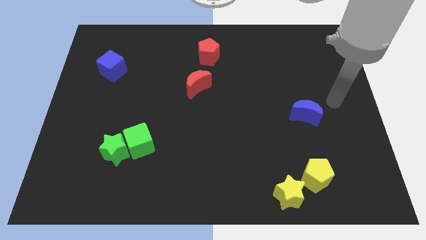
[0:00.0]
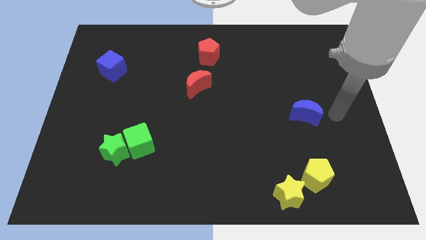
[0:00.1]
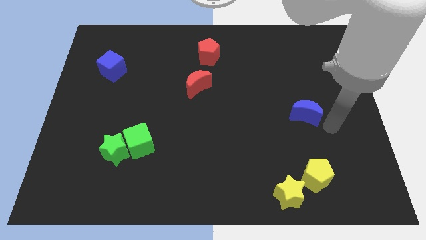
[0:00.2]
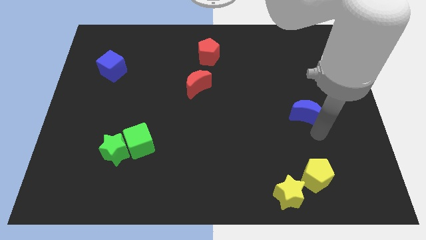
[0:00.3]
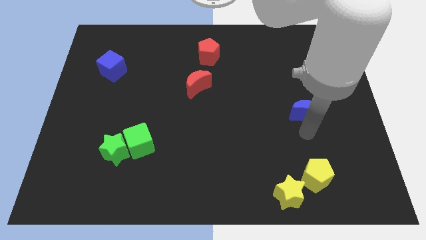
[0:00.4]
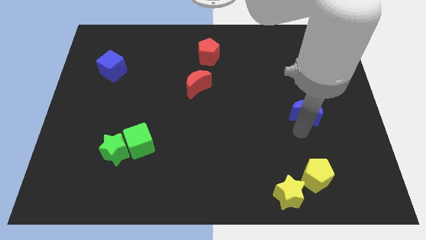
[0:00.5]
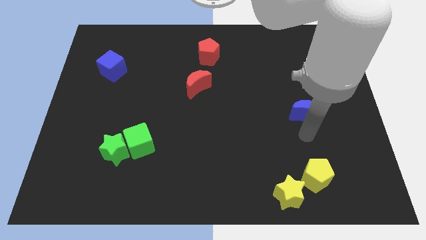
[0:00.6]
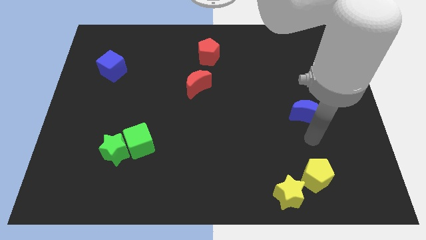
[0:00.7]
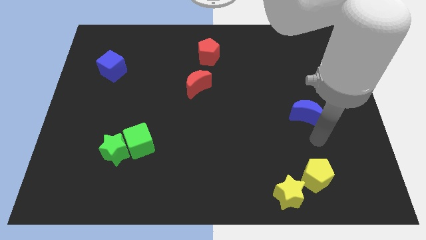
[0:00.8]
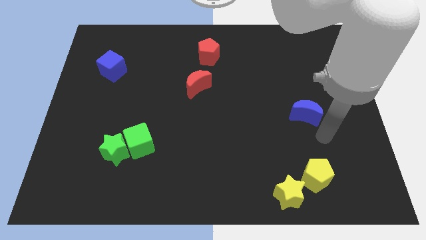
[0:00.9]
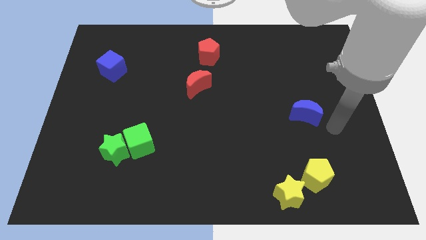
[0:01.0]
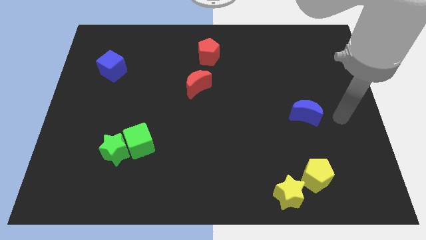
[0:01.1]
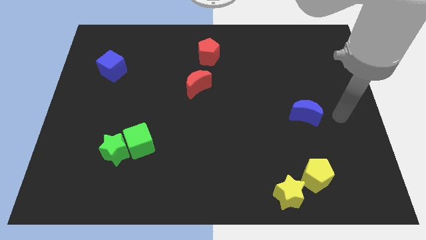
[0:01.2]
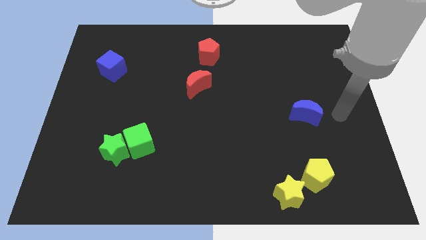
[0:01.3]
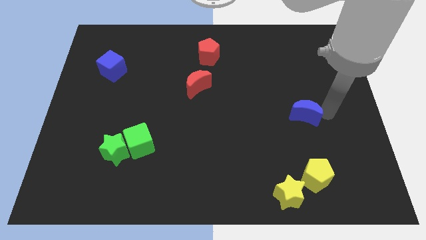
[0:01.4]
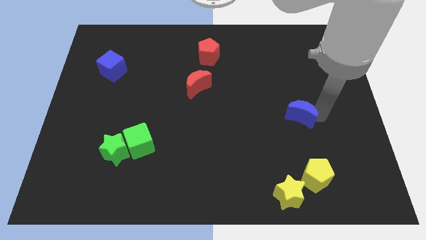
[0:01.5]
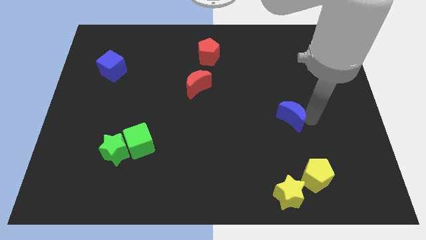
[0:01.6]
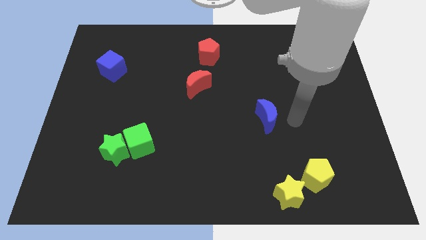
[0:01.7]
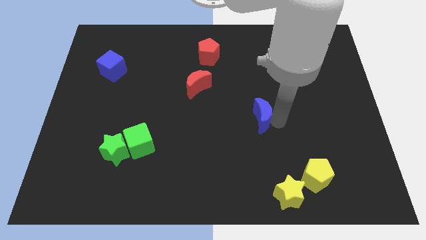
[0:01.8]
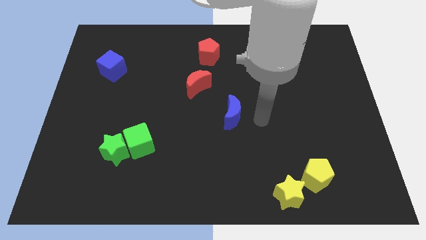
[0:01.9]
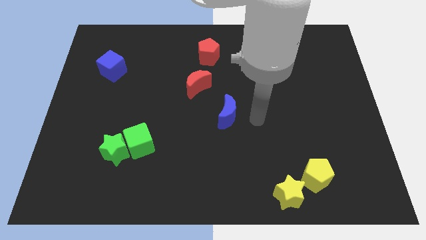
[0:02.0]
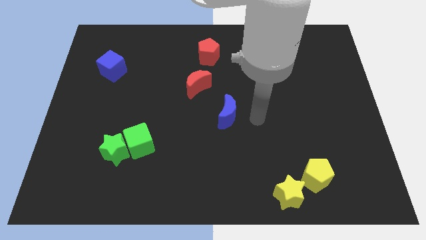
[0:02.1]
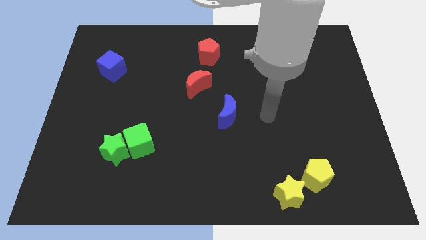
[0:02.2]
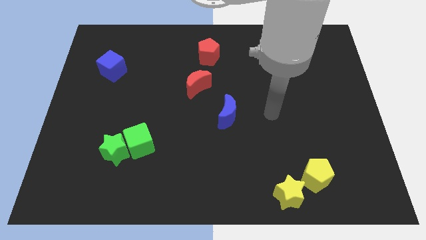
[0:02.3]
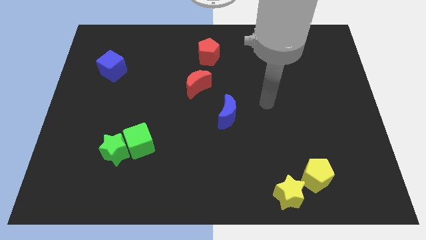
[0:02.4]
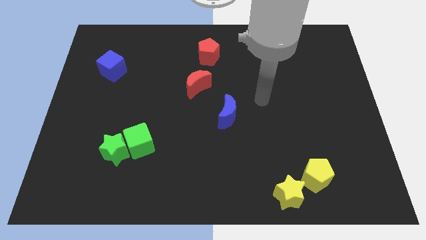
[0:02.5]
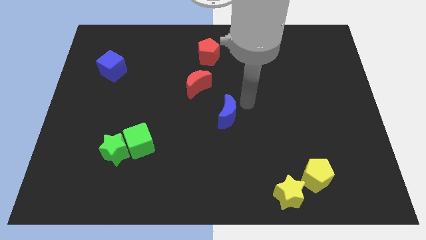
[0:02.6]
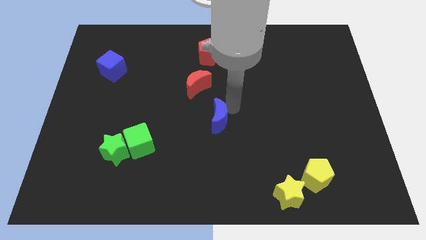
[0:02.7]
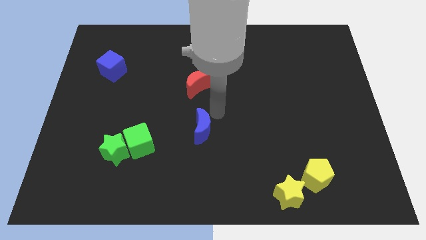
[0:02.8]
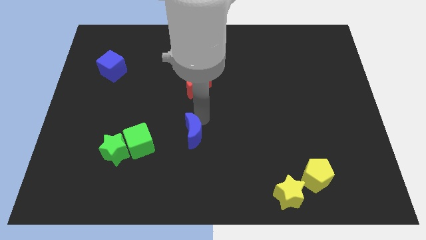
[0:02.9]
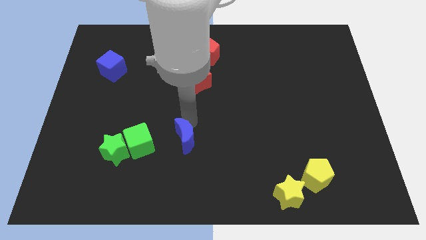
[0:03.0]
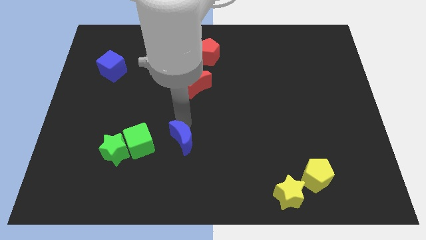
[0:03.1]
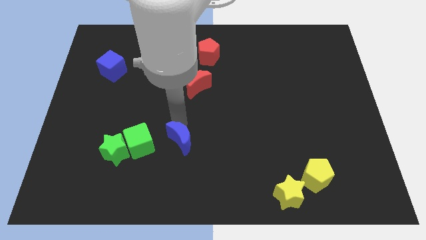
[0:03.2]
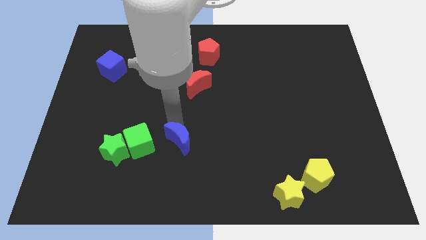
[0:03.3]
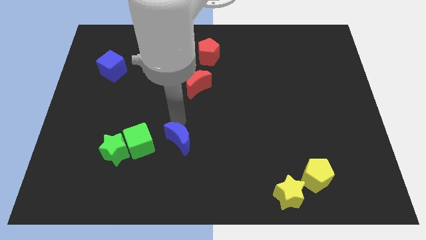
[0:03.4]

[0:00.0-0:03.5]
move the blue crescent near the group of green blocks

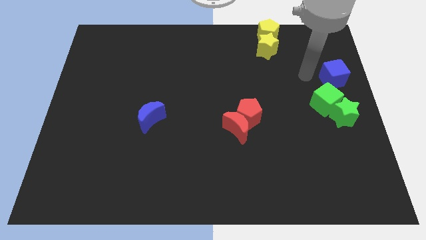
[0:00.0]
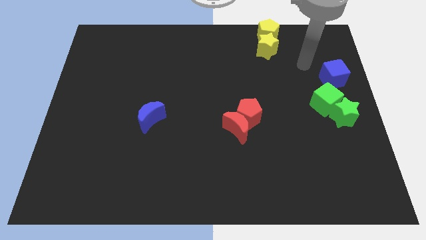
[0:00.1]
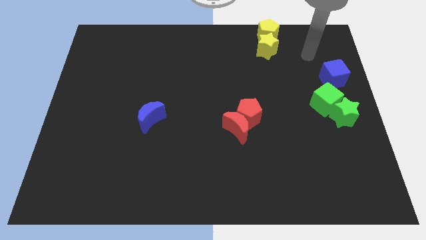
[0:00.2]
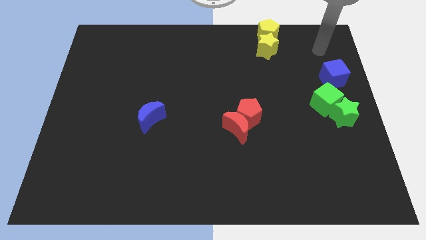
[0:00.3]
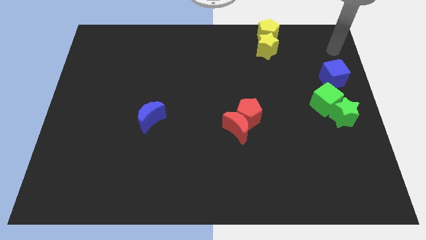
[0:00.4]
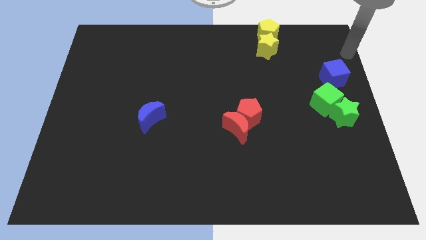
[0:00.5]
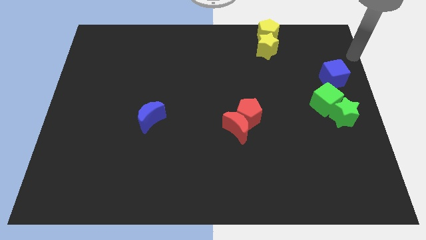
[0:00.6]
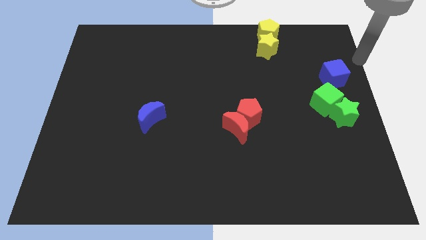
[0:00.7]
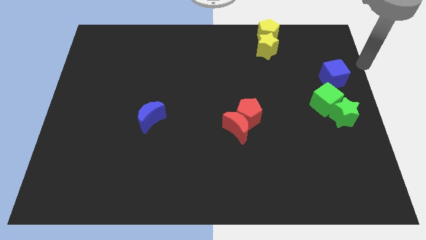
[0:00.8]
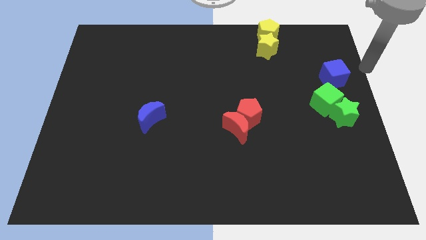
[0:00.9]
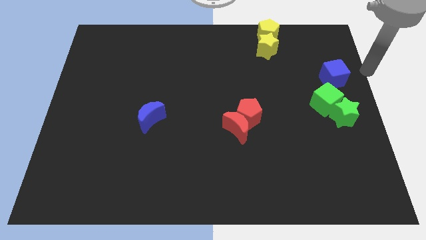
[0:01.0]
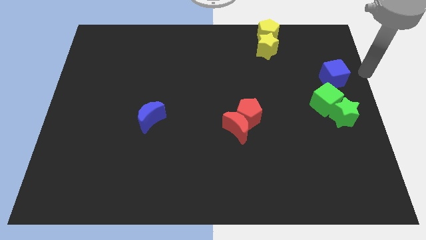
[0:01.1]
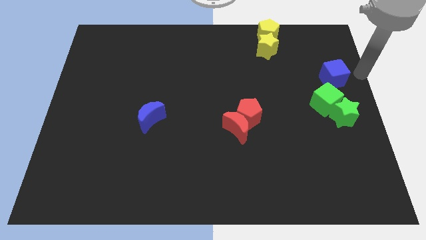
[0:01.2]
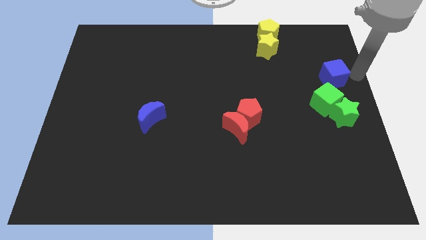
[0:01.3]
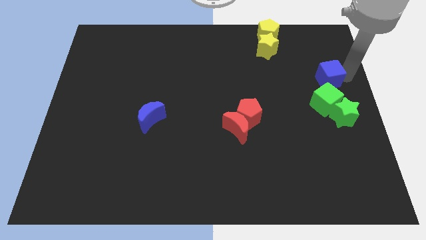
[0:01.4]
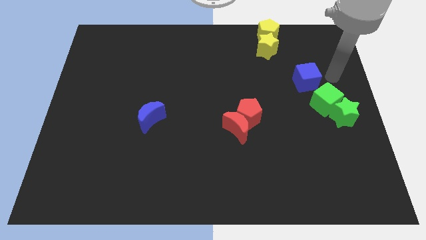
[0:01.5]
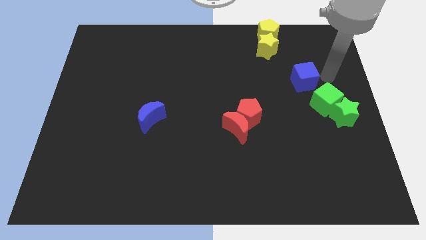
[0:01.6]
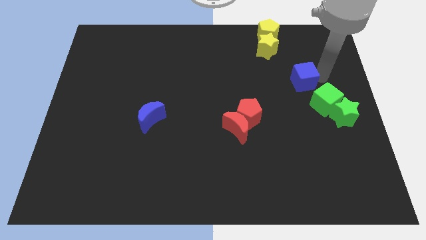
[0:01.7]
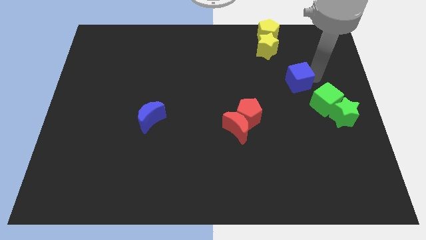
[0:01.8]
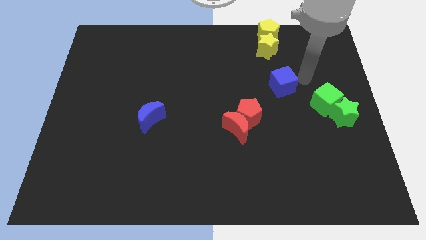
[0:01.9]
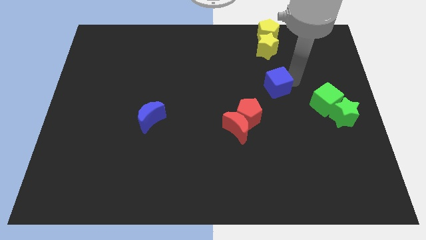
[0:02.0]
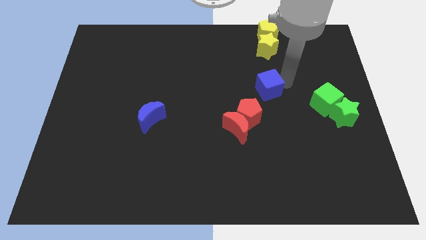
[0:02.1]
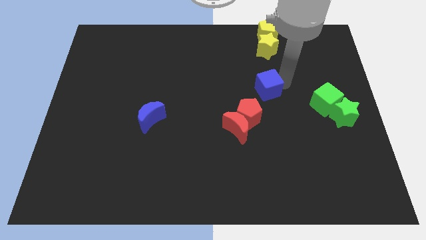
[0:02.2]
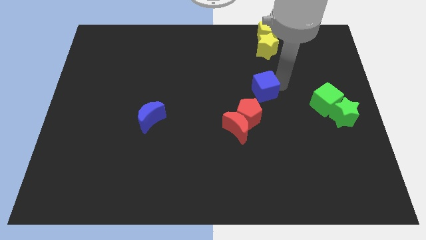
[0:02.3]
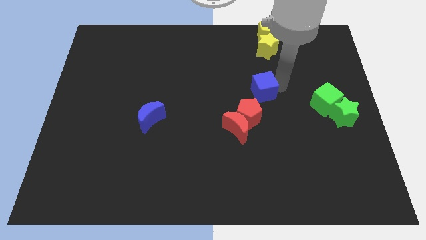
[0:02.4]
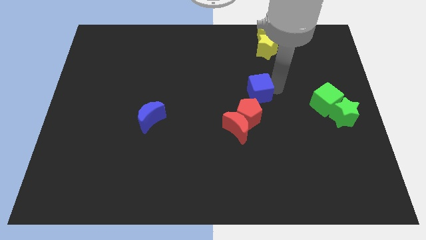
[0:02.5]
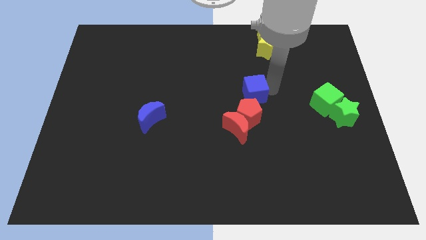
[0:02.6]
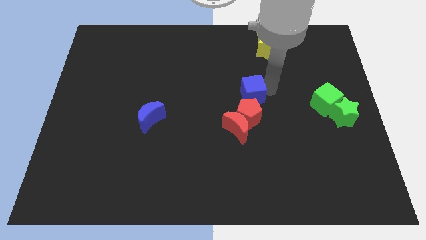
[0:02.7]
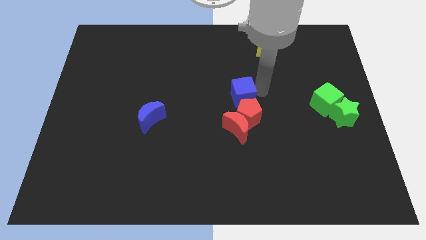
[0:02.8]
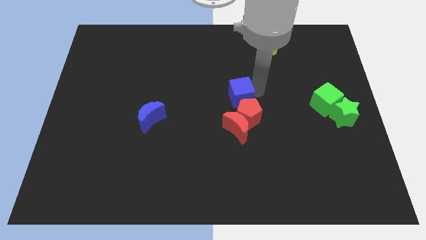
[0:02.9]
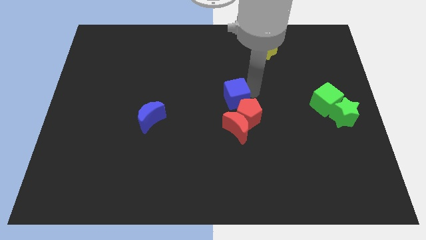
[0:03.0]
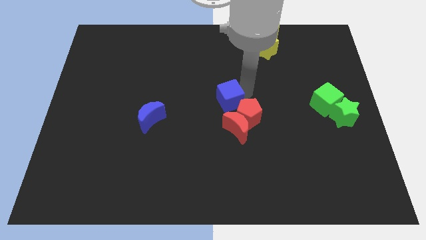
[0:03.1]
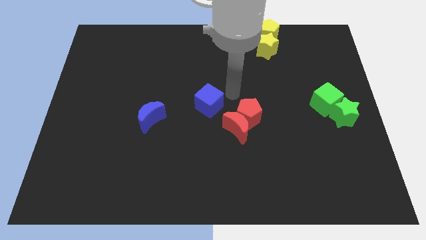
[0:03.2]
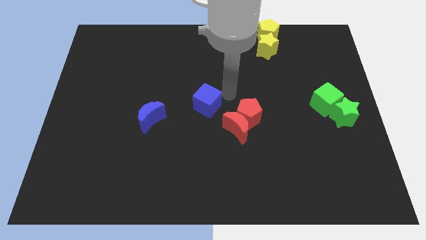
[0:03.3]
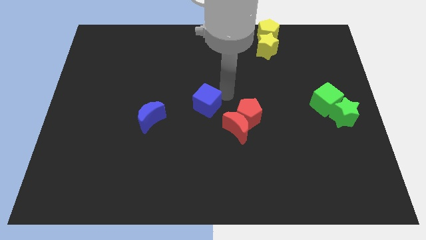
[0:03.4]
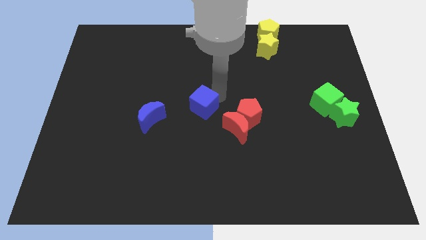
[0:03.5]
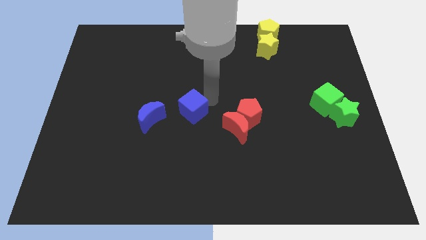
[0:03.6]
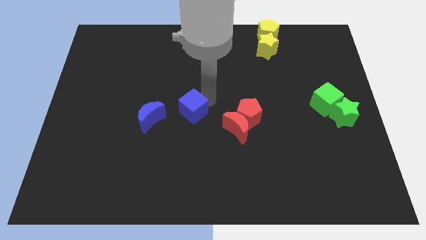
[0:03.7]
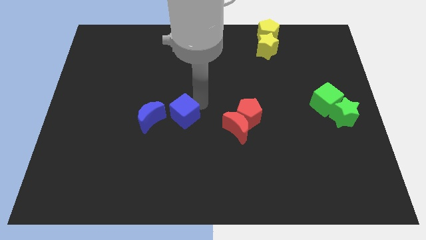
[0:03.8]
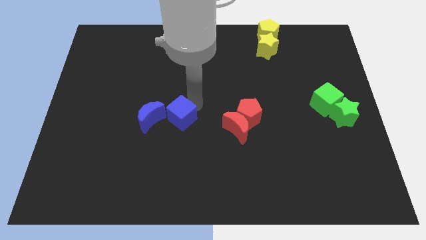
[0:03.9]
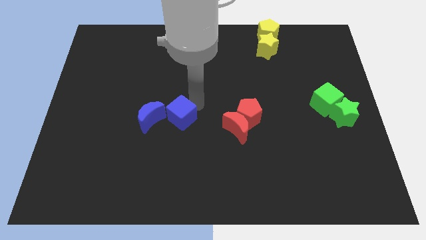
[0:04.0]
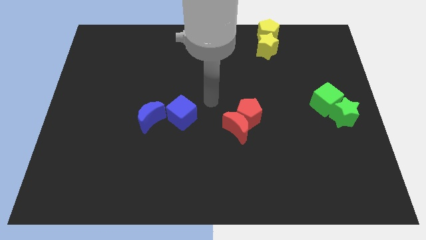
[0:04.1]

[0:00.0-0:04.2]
push the blue cube to the right of the blue crescent

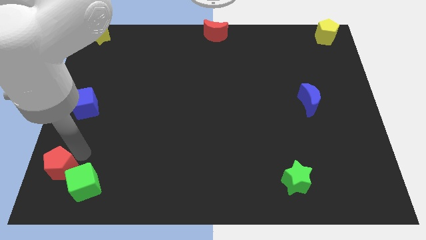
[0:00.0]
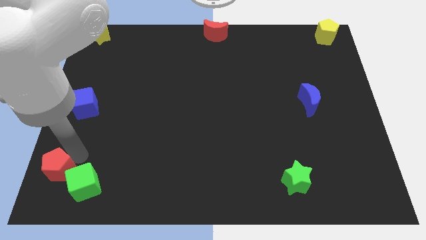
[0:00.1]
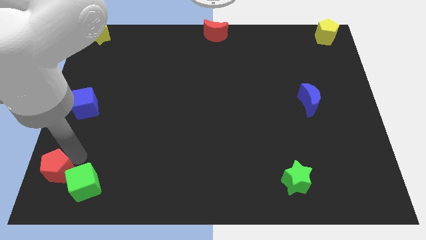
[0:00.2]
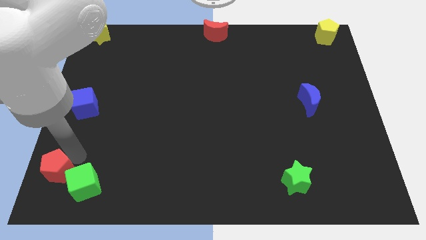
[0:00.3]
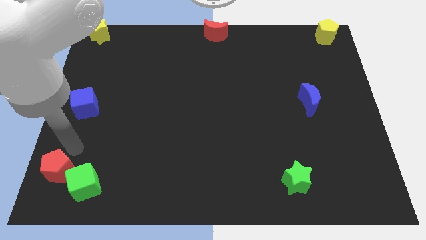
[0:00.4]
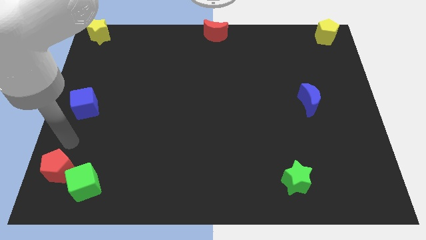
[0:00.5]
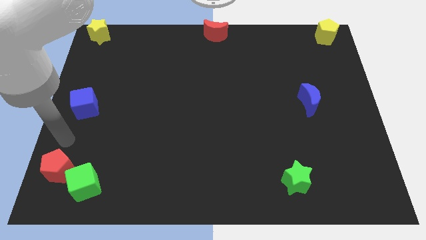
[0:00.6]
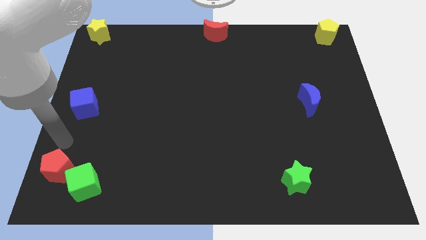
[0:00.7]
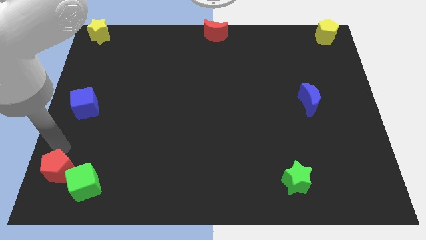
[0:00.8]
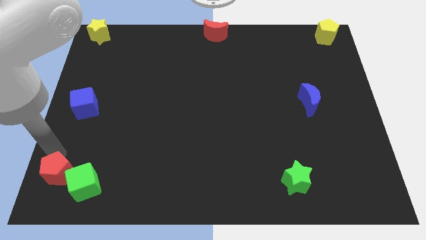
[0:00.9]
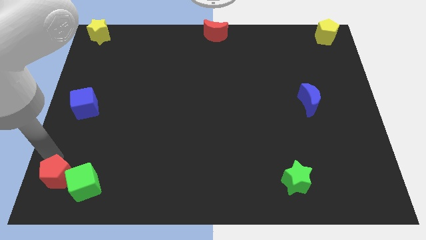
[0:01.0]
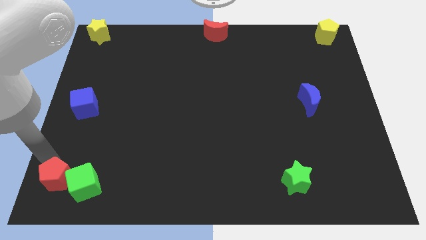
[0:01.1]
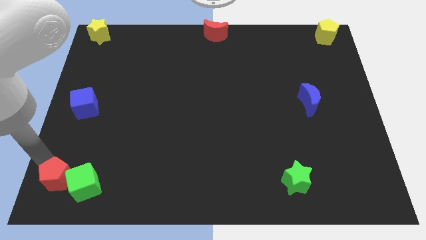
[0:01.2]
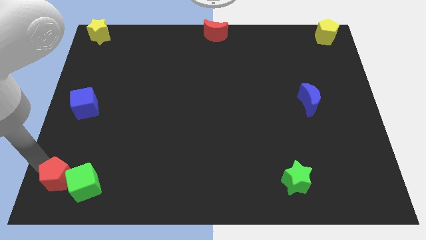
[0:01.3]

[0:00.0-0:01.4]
move the red pentagon to the left of the green cube
